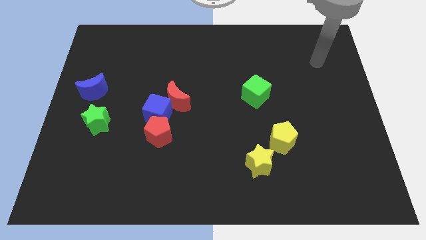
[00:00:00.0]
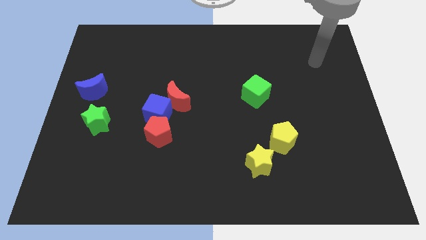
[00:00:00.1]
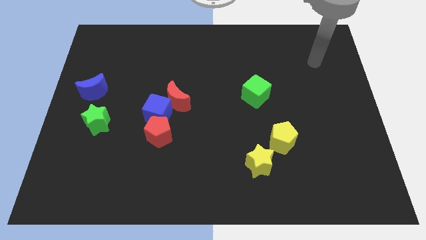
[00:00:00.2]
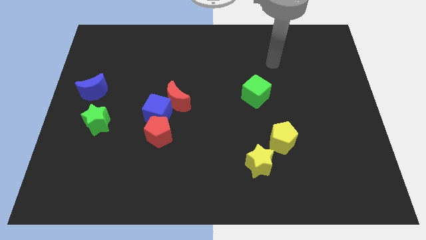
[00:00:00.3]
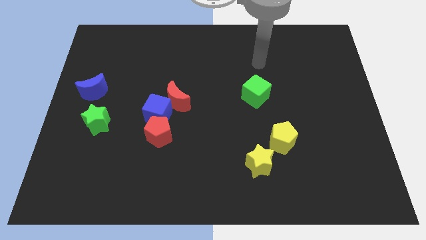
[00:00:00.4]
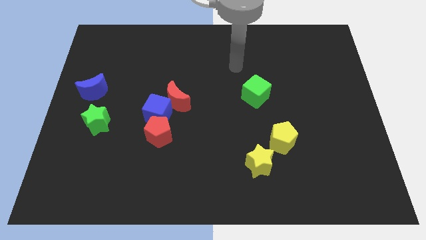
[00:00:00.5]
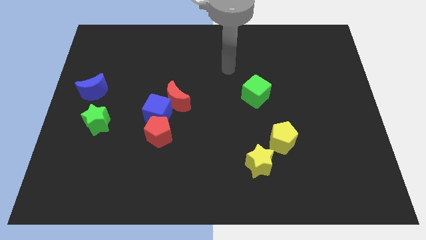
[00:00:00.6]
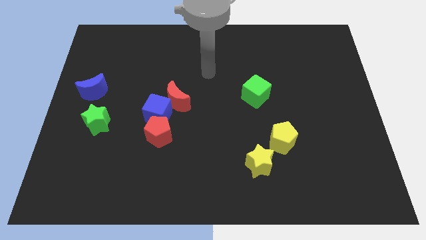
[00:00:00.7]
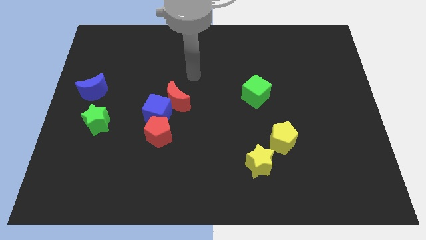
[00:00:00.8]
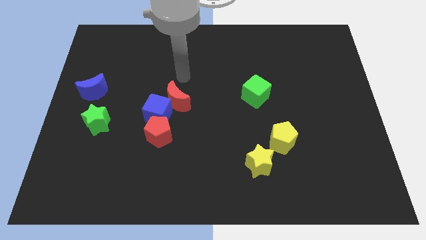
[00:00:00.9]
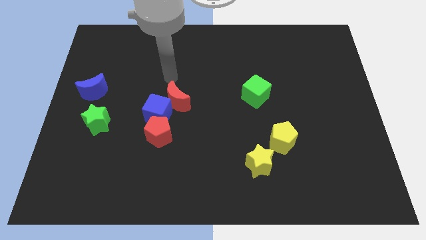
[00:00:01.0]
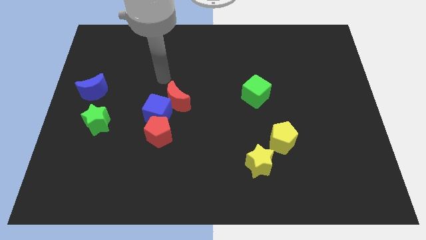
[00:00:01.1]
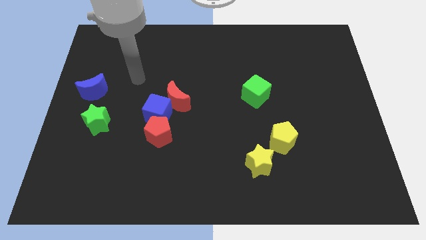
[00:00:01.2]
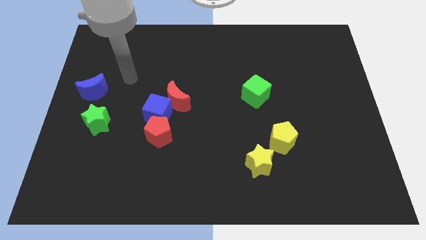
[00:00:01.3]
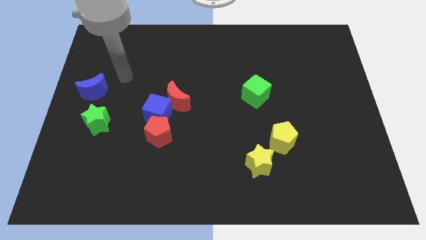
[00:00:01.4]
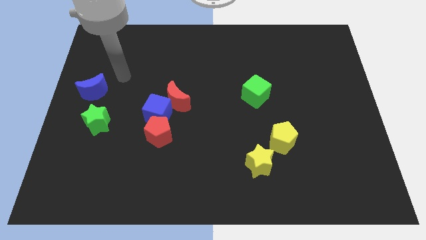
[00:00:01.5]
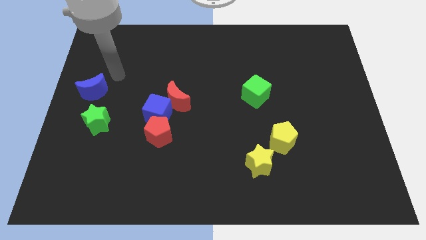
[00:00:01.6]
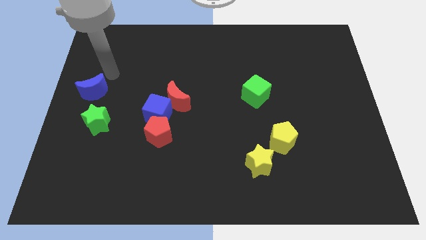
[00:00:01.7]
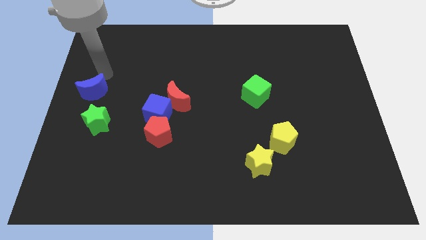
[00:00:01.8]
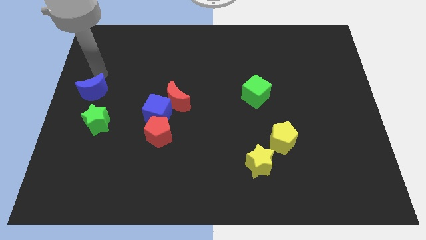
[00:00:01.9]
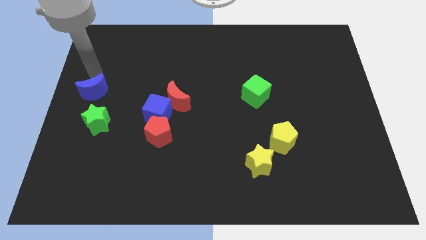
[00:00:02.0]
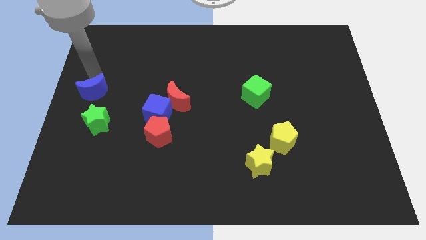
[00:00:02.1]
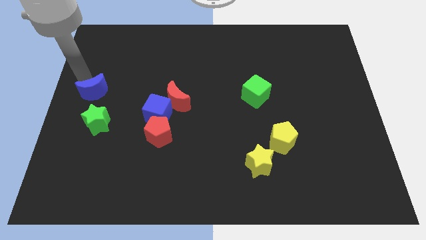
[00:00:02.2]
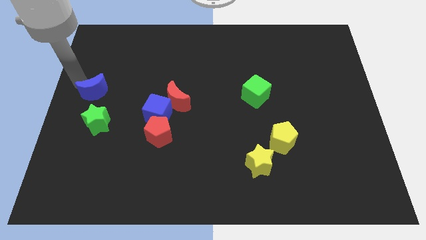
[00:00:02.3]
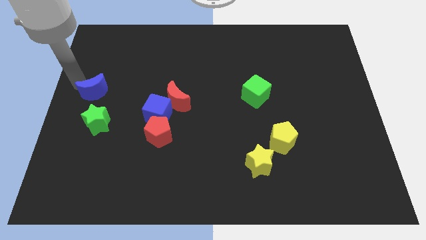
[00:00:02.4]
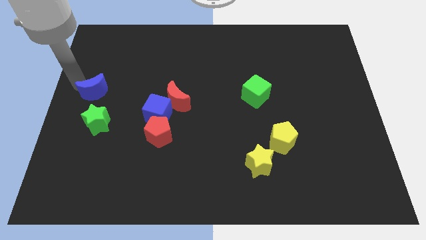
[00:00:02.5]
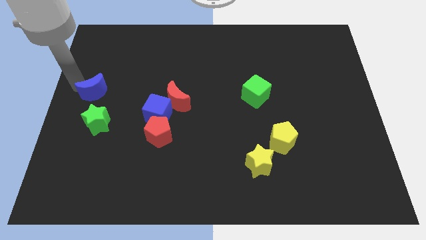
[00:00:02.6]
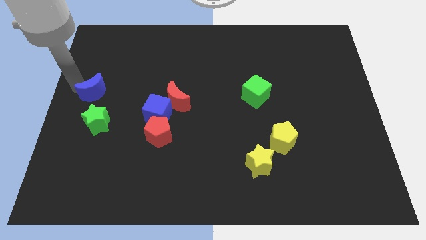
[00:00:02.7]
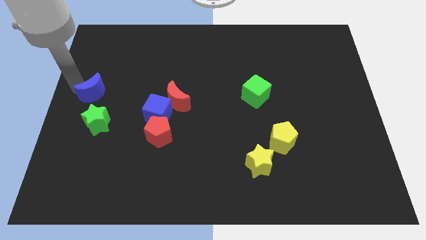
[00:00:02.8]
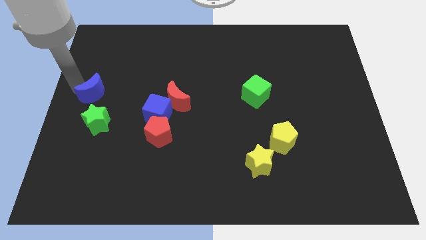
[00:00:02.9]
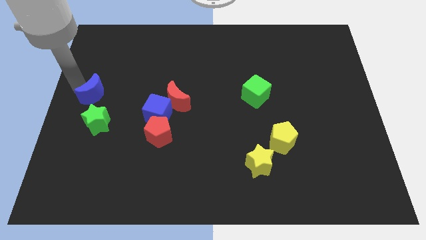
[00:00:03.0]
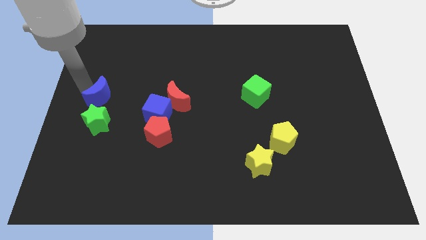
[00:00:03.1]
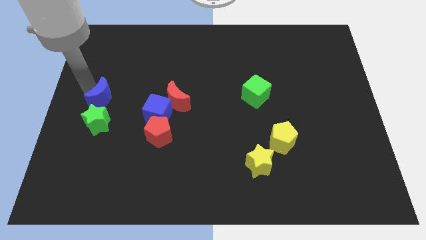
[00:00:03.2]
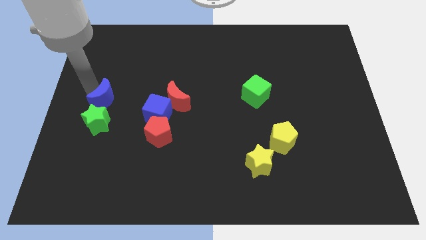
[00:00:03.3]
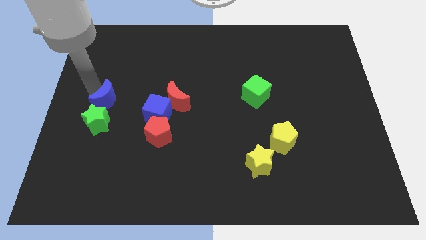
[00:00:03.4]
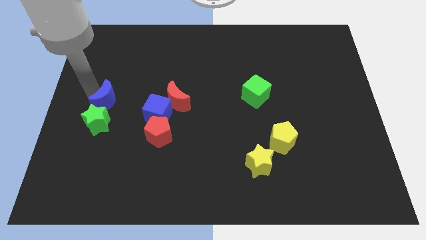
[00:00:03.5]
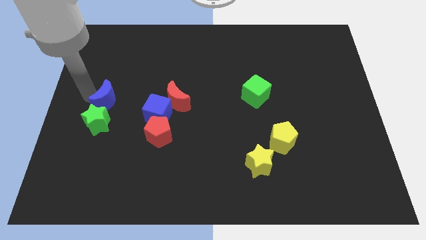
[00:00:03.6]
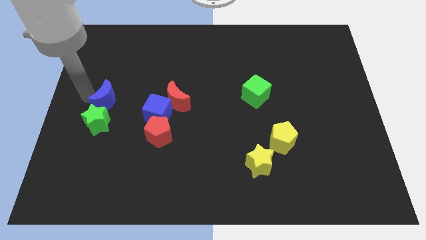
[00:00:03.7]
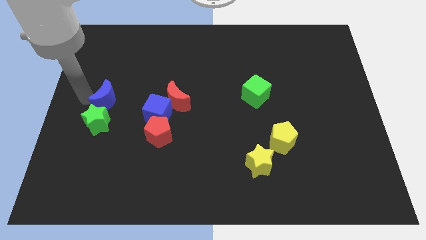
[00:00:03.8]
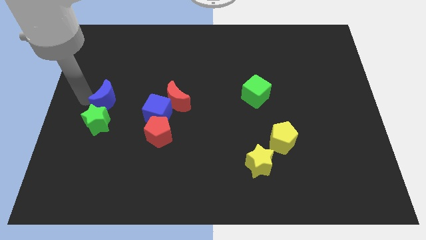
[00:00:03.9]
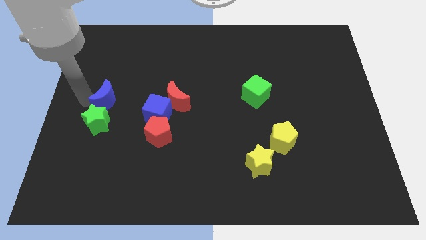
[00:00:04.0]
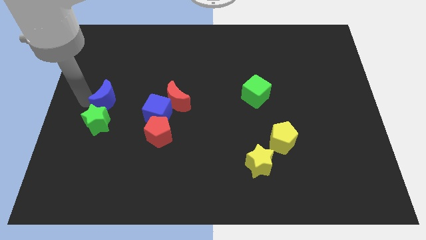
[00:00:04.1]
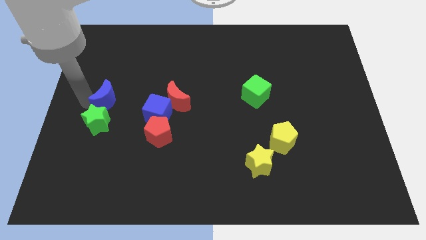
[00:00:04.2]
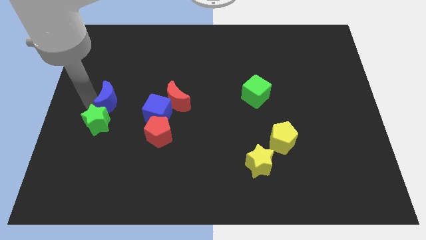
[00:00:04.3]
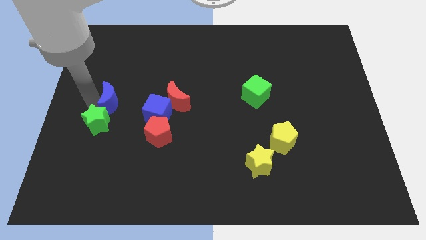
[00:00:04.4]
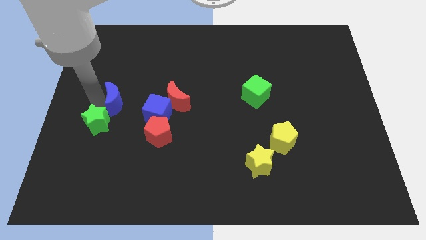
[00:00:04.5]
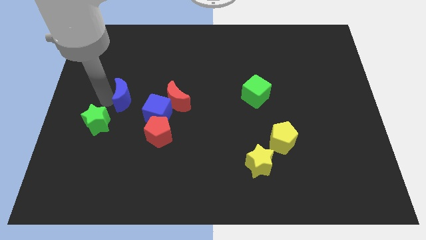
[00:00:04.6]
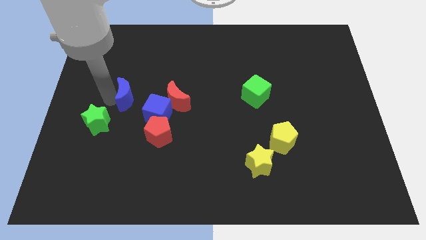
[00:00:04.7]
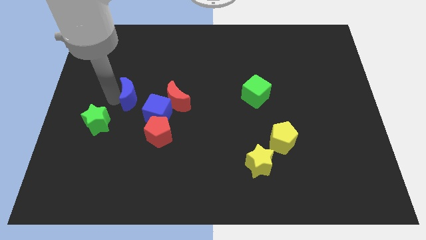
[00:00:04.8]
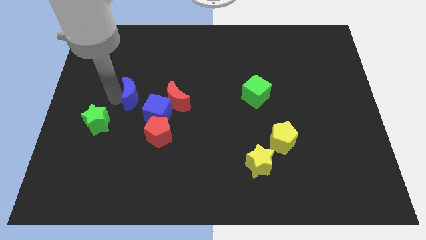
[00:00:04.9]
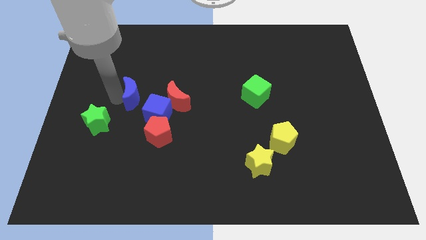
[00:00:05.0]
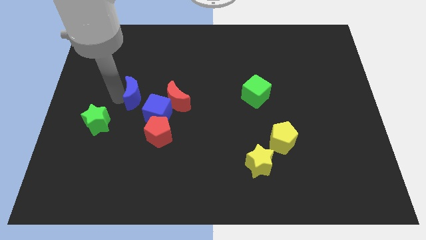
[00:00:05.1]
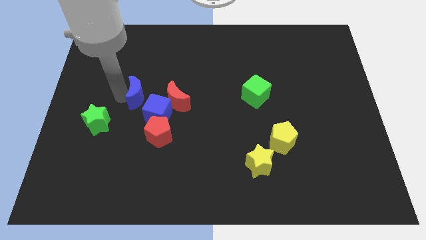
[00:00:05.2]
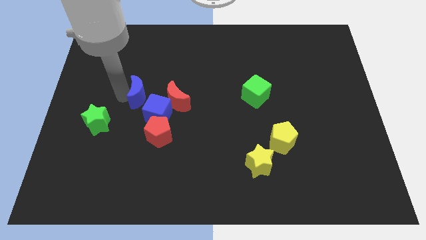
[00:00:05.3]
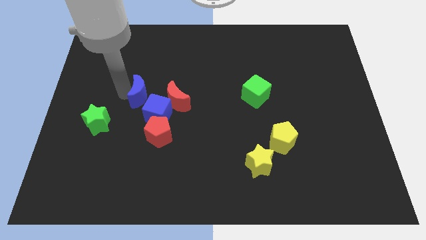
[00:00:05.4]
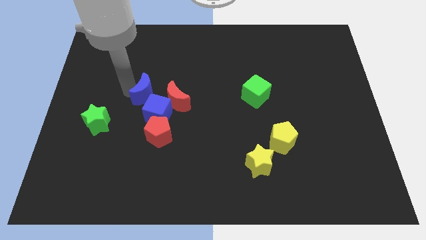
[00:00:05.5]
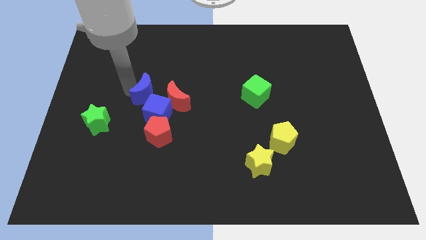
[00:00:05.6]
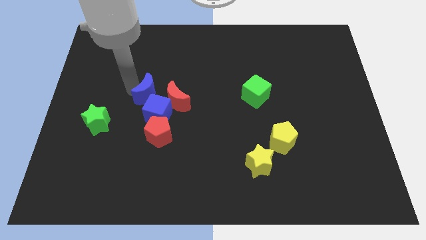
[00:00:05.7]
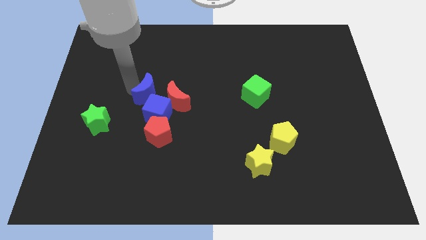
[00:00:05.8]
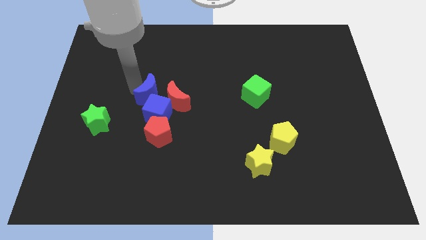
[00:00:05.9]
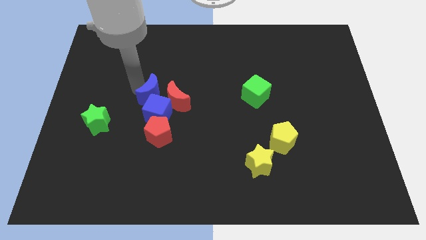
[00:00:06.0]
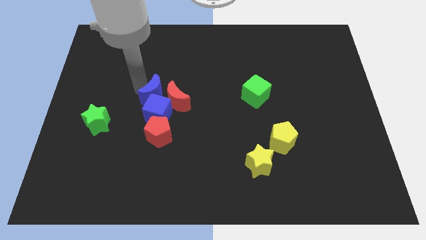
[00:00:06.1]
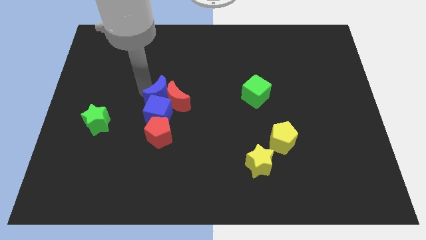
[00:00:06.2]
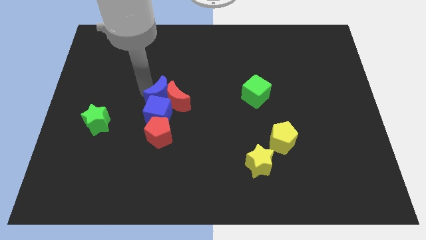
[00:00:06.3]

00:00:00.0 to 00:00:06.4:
push the blue moon to the red moon

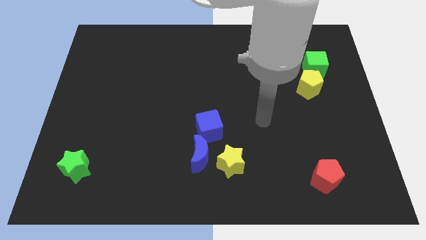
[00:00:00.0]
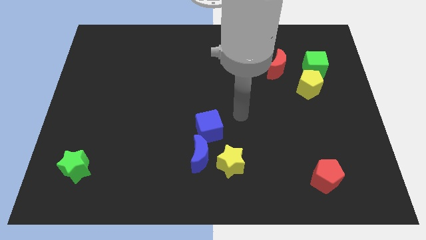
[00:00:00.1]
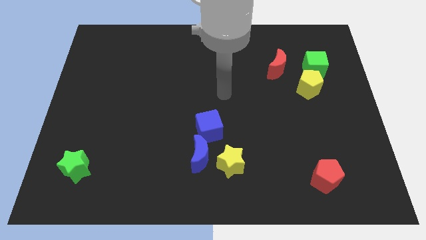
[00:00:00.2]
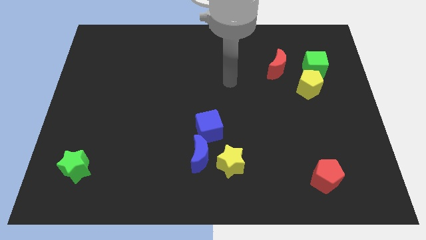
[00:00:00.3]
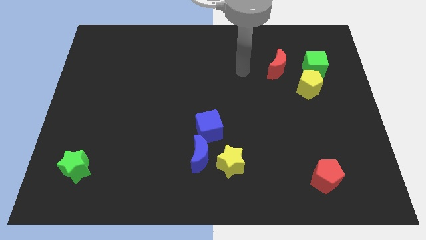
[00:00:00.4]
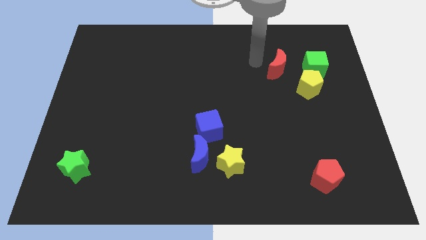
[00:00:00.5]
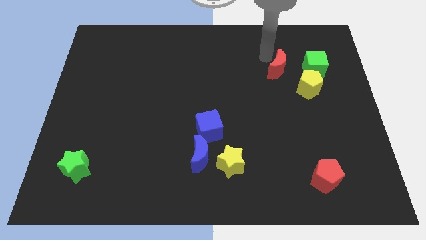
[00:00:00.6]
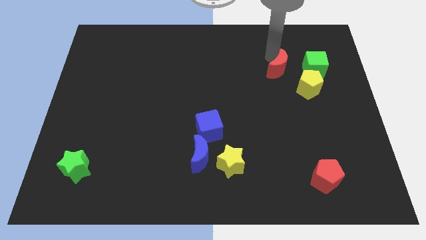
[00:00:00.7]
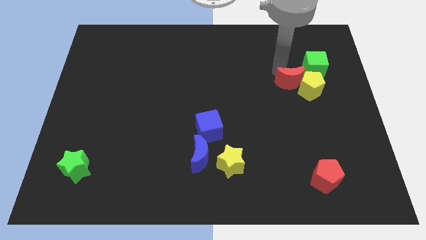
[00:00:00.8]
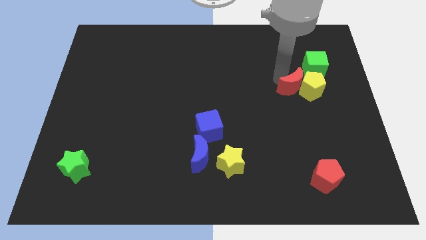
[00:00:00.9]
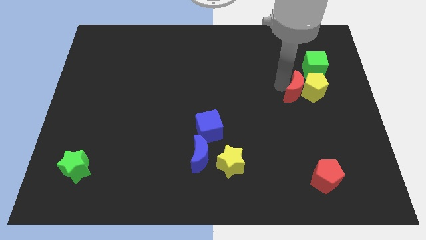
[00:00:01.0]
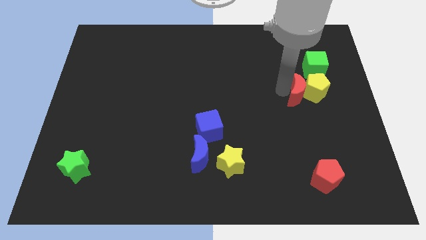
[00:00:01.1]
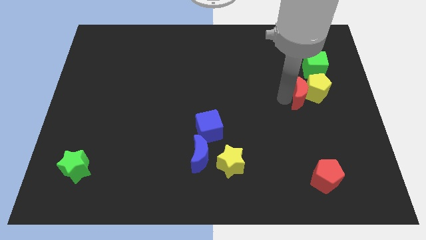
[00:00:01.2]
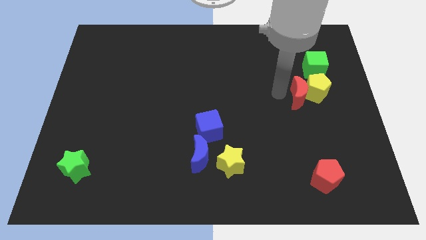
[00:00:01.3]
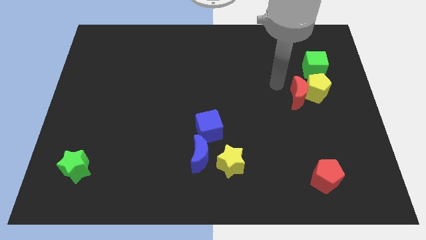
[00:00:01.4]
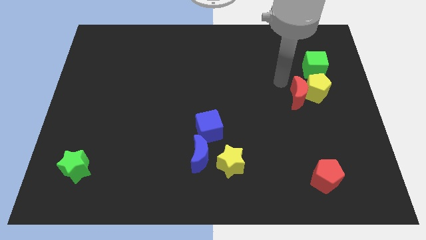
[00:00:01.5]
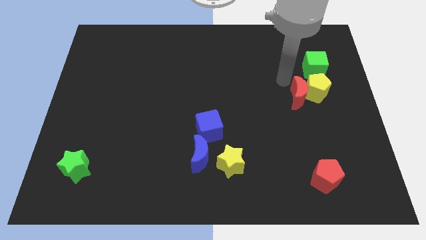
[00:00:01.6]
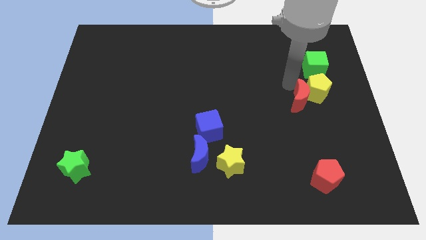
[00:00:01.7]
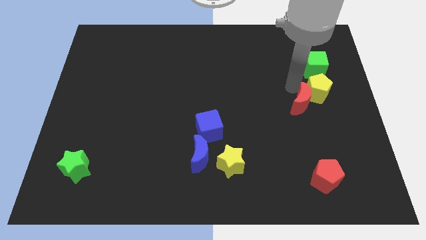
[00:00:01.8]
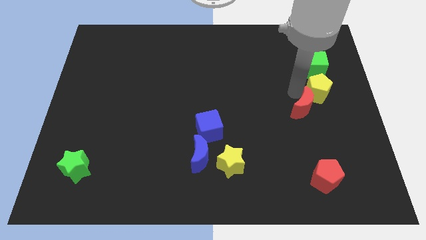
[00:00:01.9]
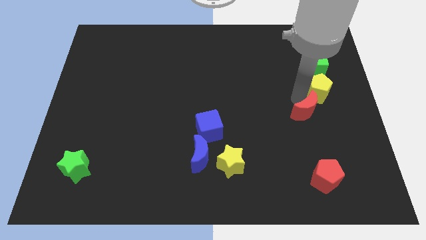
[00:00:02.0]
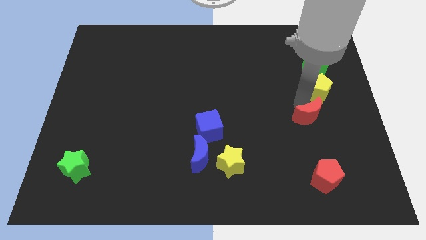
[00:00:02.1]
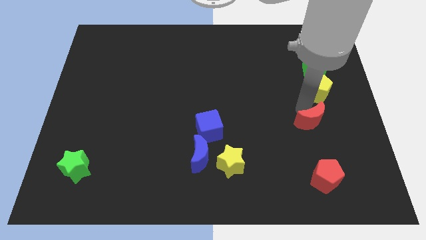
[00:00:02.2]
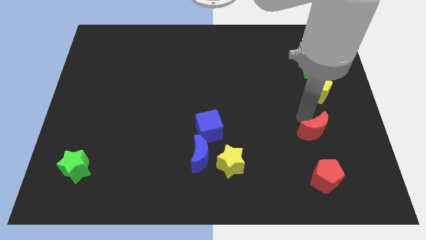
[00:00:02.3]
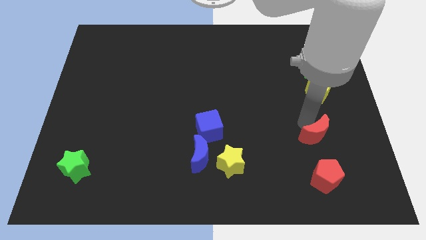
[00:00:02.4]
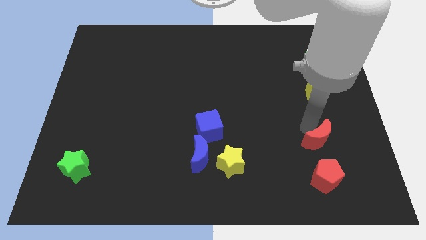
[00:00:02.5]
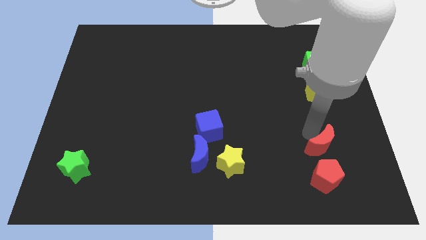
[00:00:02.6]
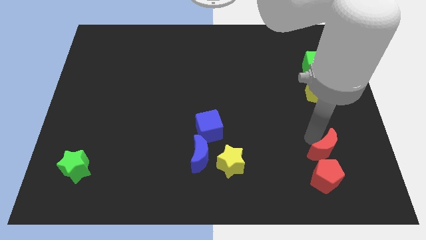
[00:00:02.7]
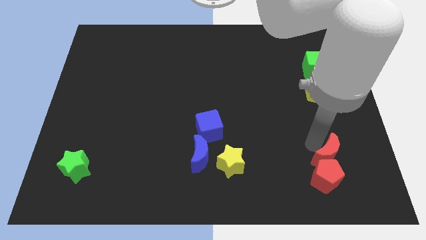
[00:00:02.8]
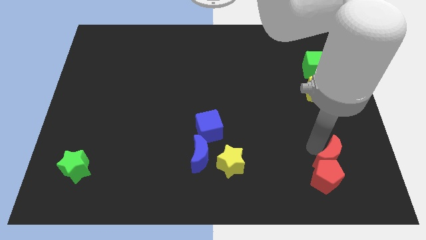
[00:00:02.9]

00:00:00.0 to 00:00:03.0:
slide the red moon next to the red pentagon
